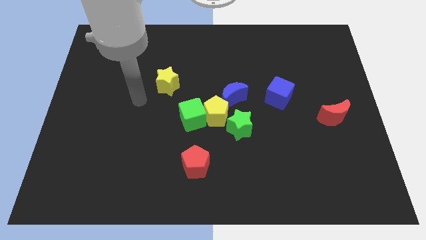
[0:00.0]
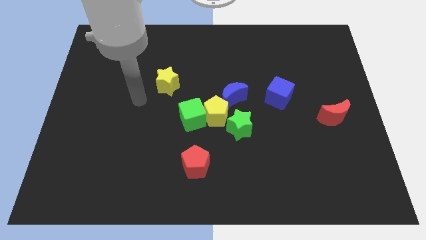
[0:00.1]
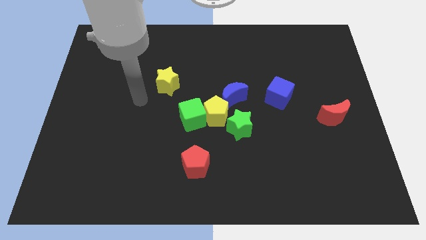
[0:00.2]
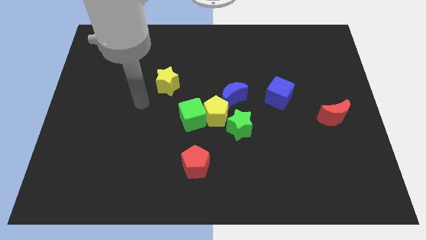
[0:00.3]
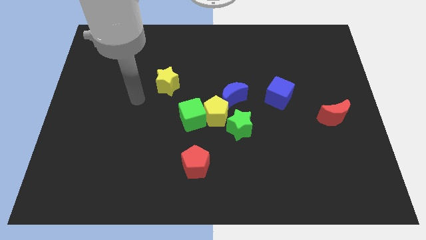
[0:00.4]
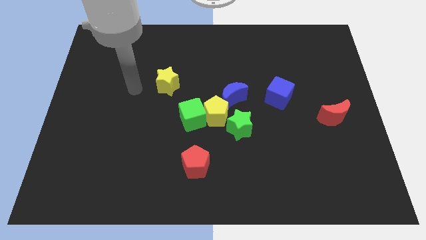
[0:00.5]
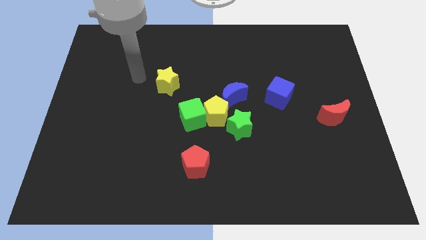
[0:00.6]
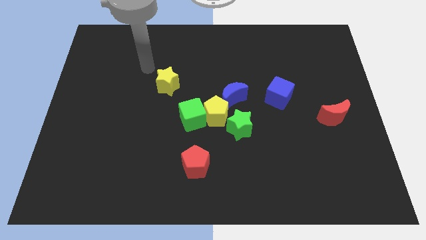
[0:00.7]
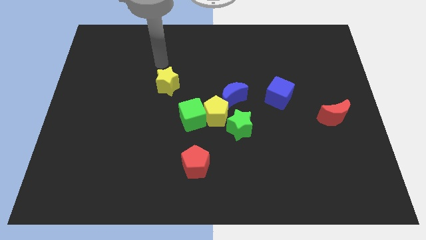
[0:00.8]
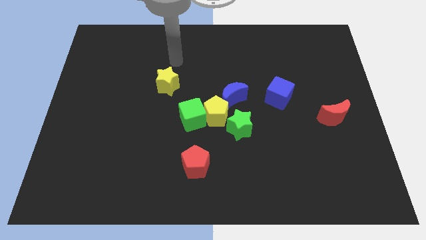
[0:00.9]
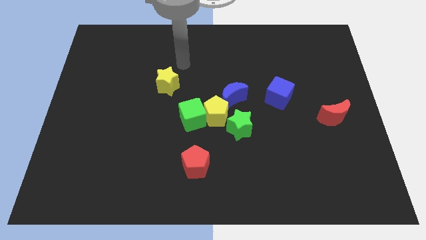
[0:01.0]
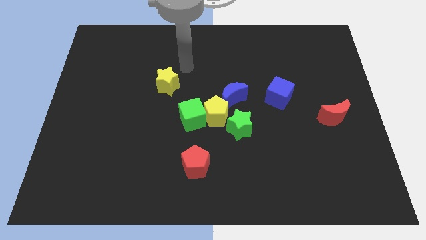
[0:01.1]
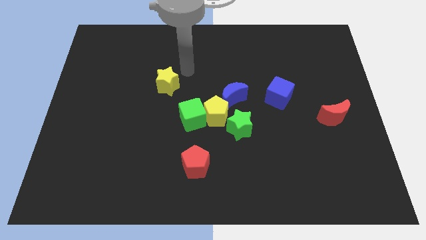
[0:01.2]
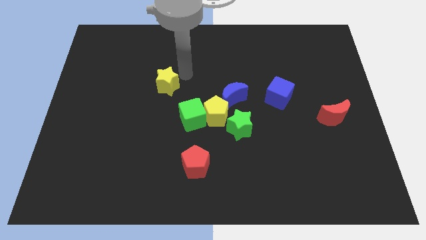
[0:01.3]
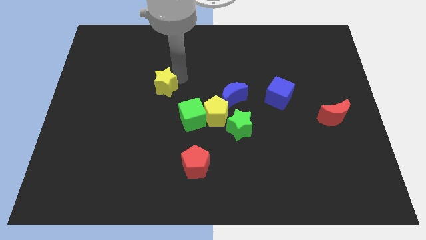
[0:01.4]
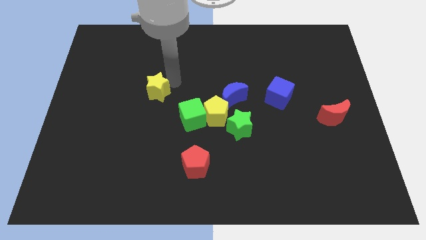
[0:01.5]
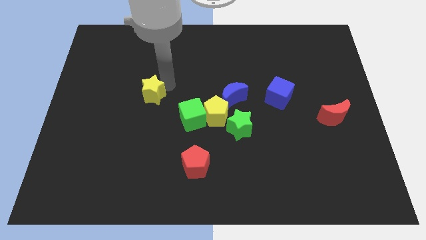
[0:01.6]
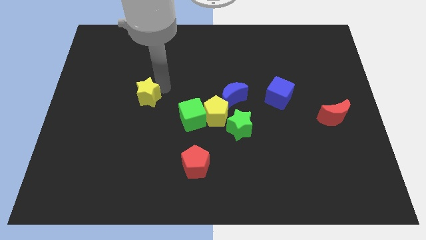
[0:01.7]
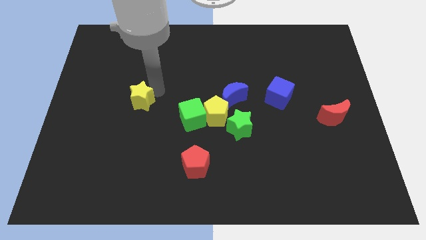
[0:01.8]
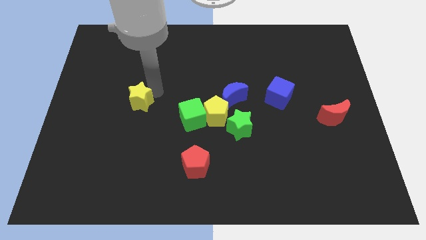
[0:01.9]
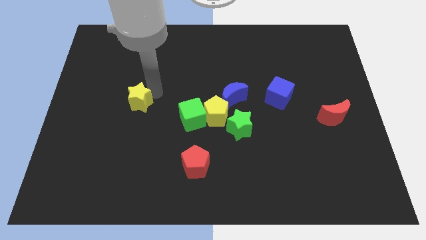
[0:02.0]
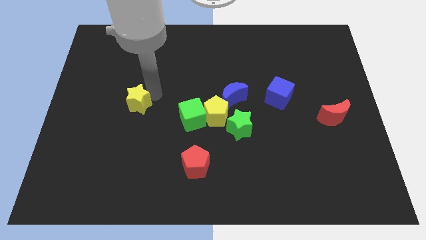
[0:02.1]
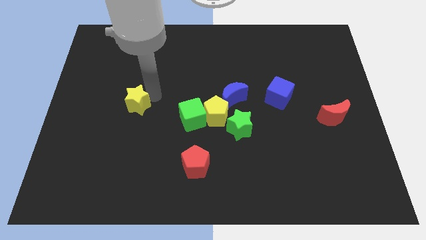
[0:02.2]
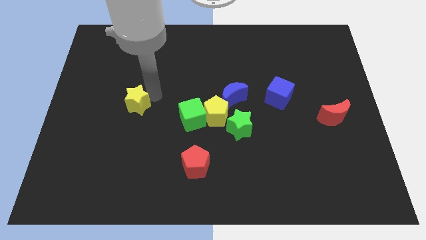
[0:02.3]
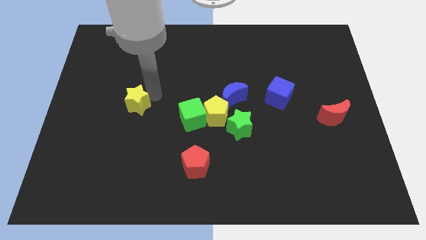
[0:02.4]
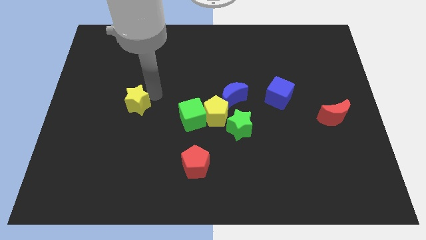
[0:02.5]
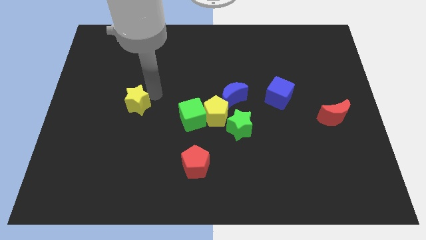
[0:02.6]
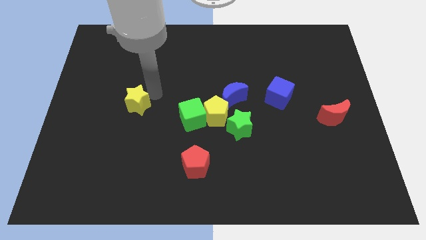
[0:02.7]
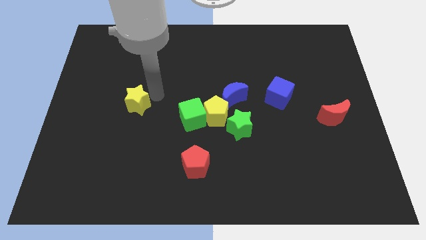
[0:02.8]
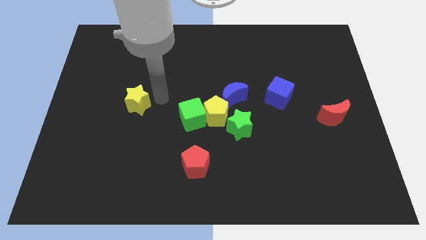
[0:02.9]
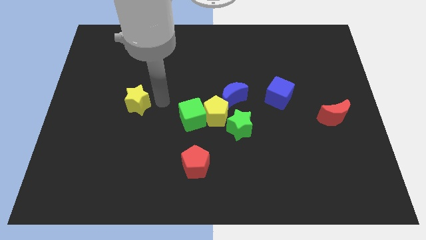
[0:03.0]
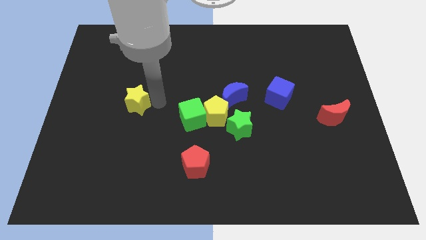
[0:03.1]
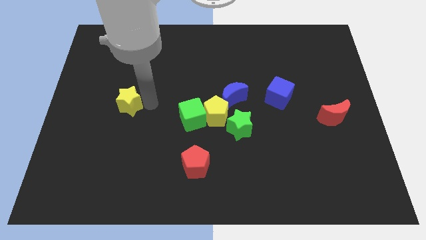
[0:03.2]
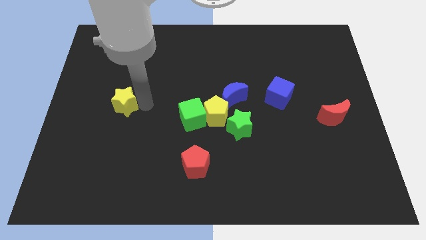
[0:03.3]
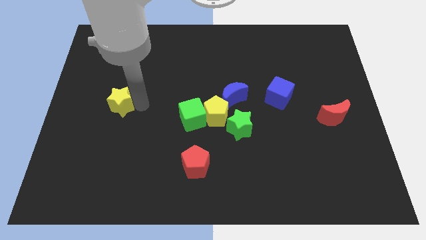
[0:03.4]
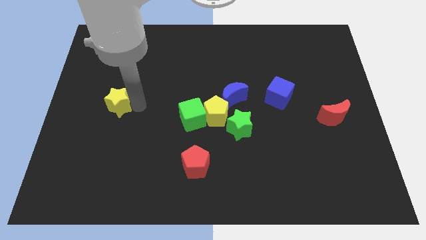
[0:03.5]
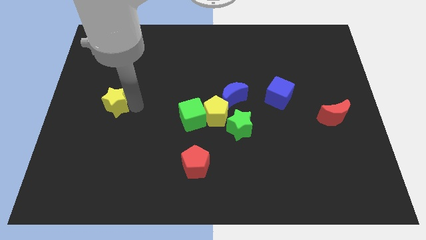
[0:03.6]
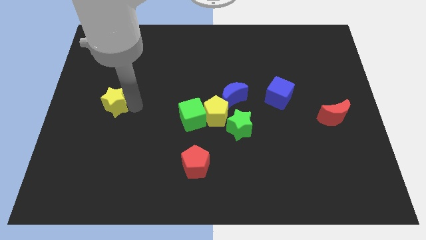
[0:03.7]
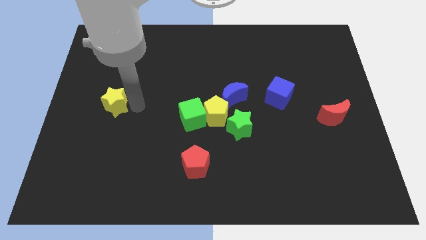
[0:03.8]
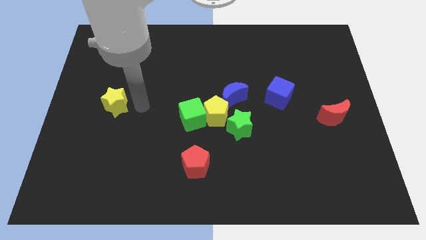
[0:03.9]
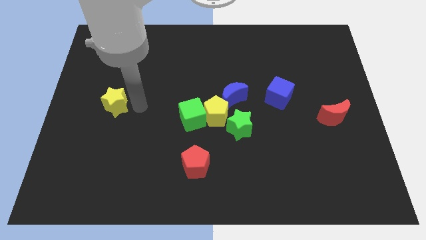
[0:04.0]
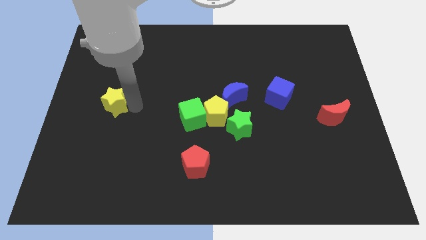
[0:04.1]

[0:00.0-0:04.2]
push the yellow star to the left

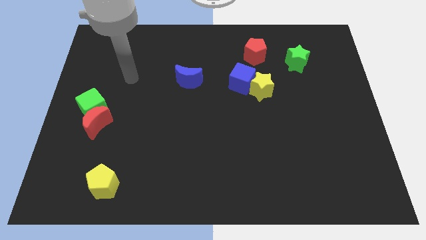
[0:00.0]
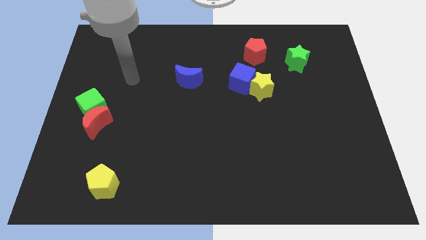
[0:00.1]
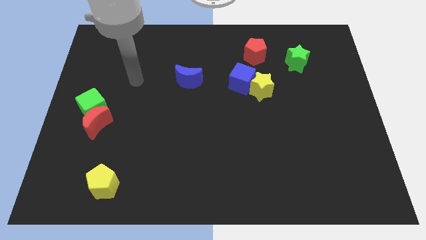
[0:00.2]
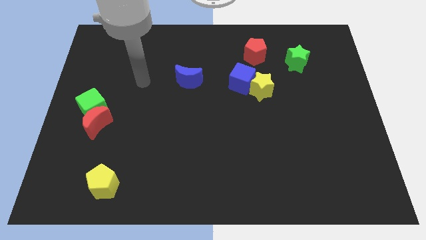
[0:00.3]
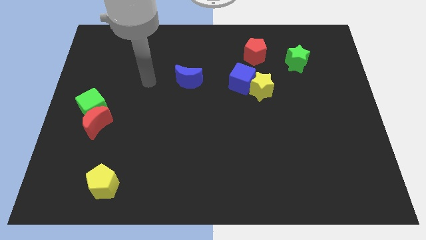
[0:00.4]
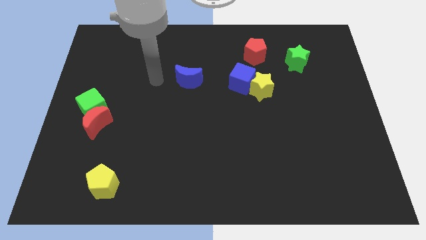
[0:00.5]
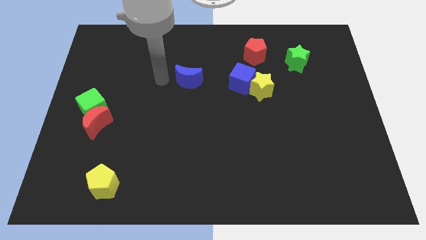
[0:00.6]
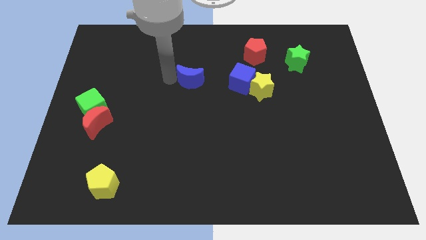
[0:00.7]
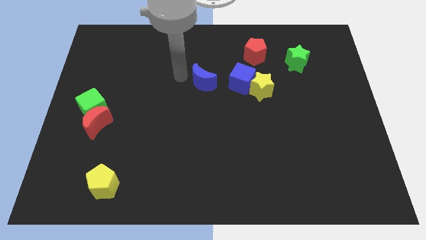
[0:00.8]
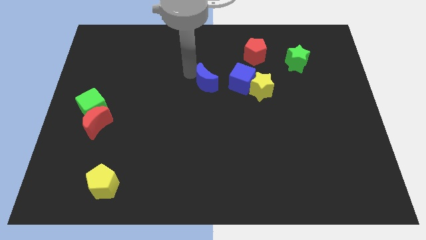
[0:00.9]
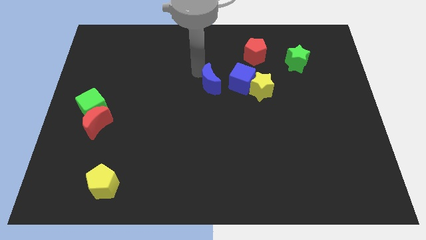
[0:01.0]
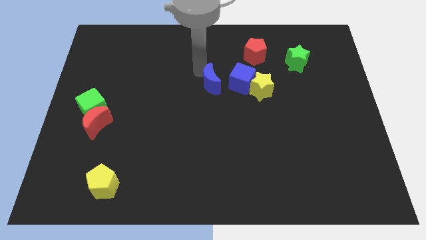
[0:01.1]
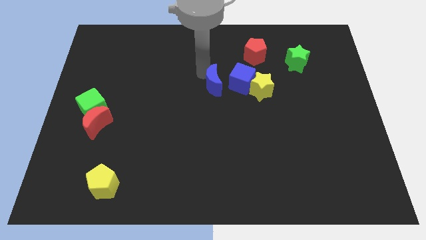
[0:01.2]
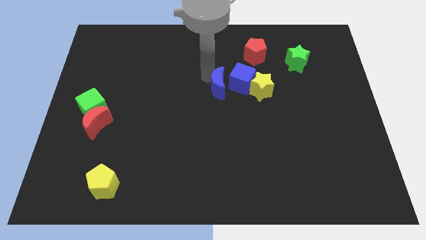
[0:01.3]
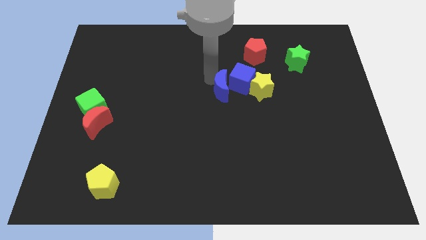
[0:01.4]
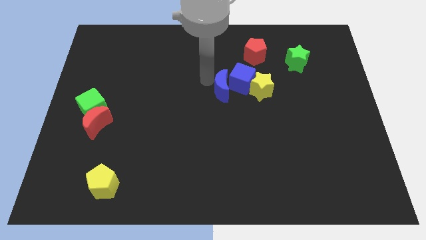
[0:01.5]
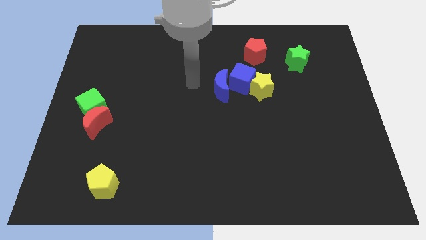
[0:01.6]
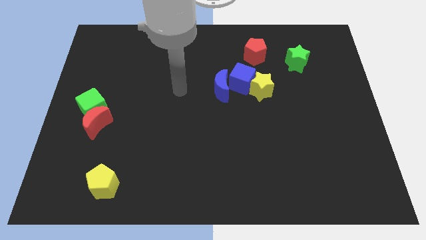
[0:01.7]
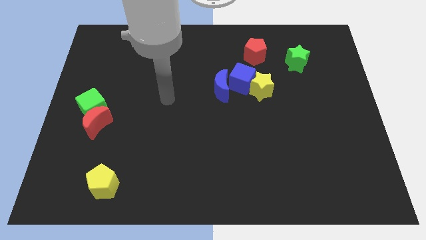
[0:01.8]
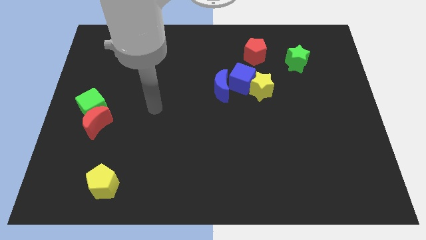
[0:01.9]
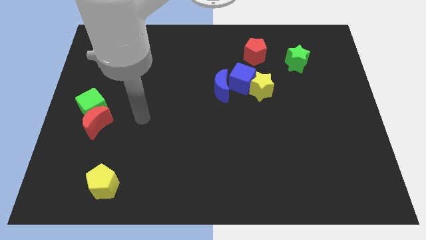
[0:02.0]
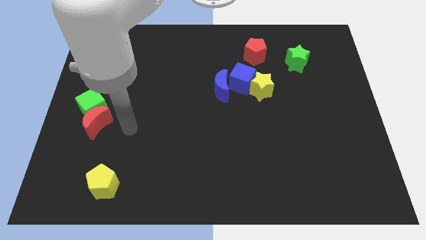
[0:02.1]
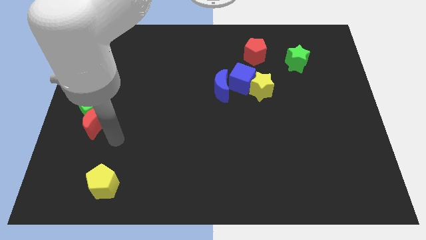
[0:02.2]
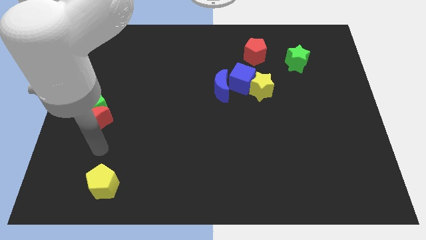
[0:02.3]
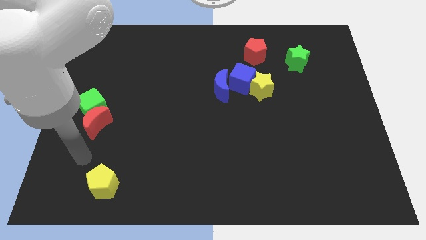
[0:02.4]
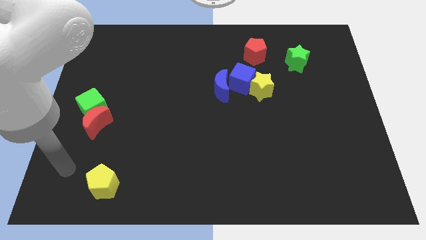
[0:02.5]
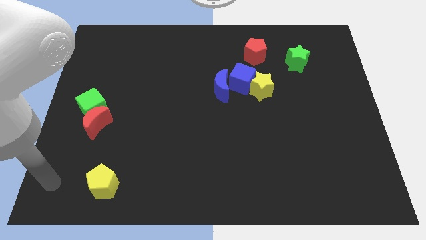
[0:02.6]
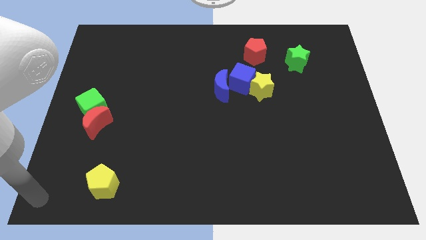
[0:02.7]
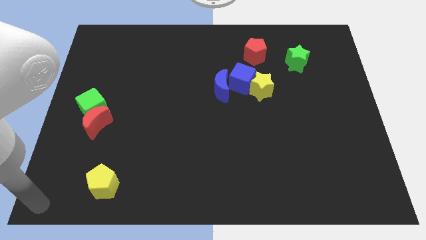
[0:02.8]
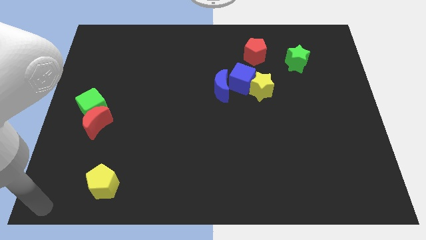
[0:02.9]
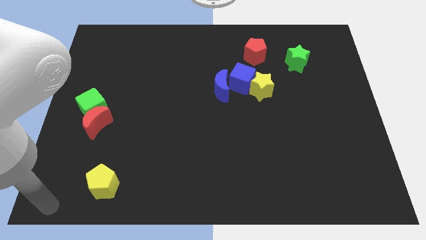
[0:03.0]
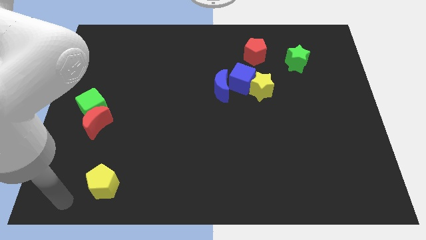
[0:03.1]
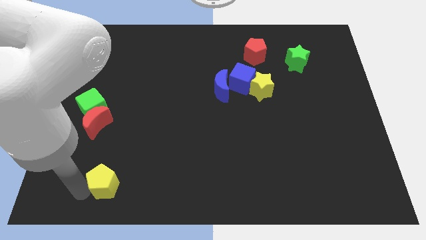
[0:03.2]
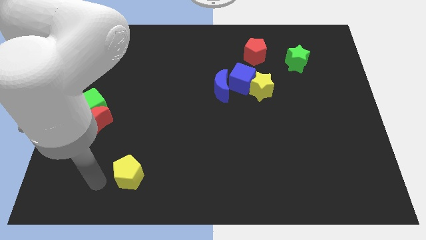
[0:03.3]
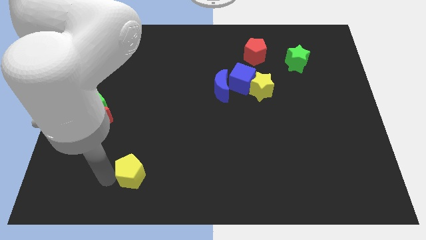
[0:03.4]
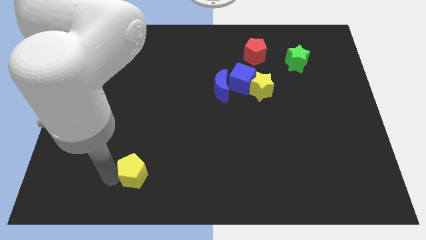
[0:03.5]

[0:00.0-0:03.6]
move the blue crescent close to the blue cube

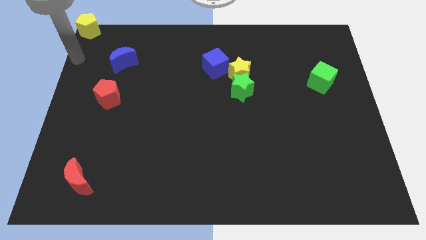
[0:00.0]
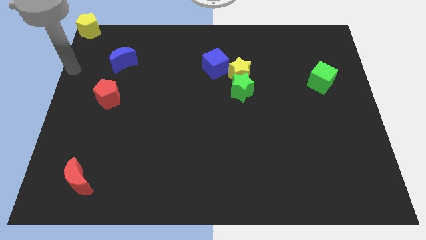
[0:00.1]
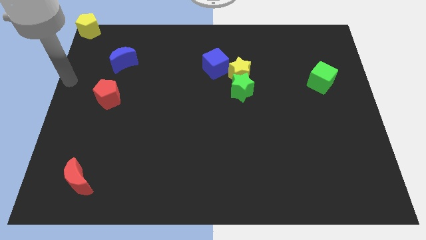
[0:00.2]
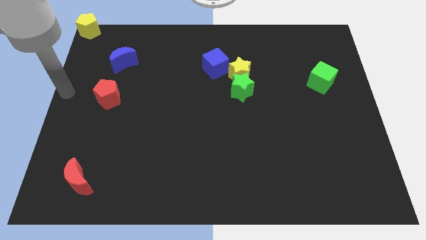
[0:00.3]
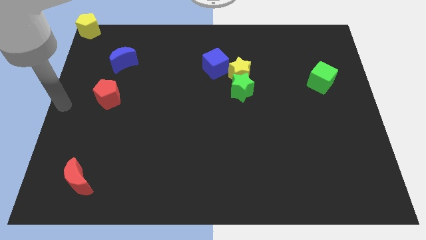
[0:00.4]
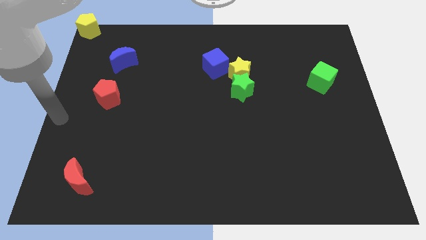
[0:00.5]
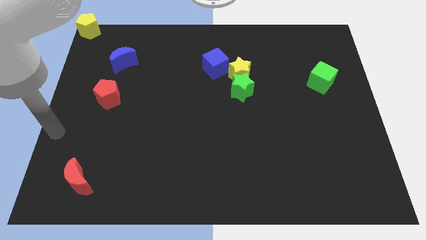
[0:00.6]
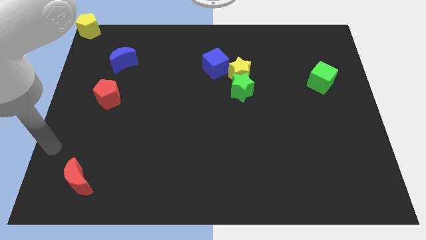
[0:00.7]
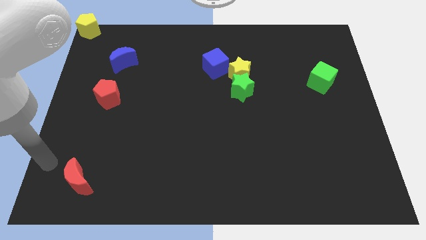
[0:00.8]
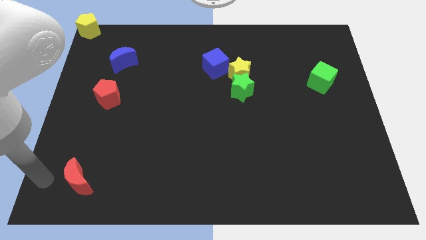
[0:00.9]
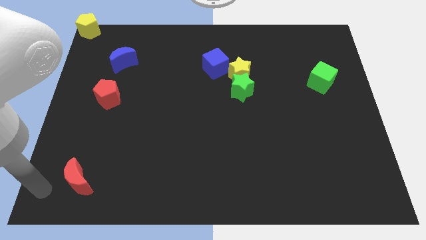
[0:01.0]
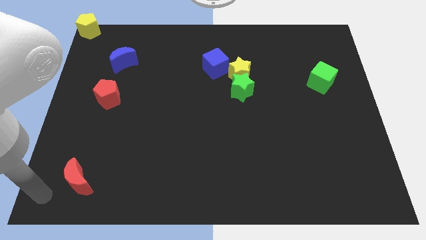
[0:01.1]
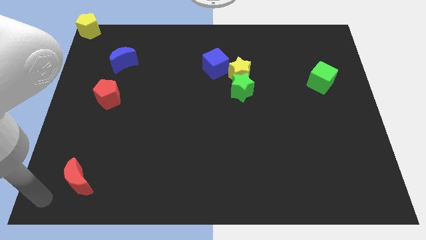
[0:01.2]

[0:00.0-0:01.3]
move your arm to the bottom left of the board
